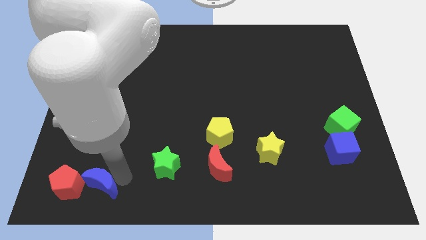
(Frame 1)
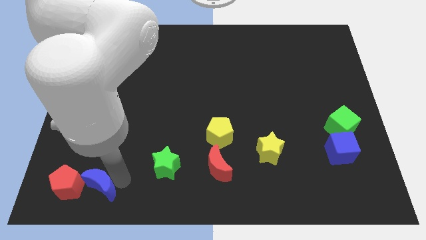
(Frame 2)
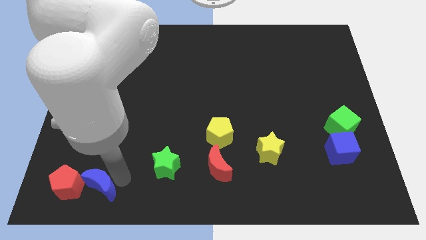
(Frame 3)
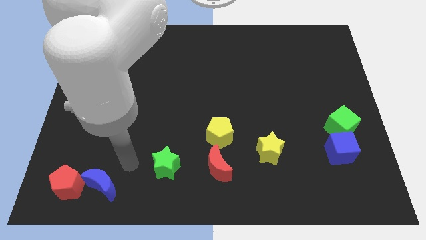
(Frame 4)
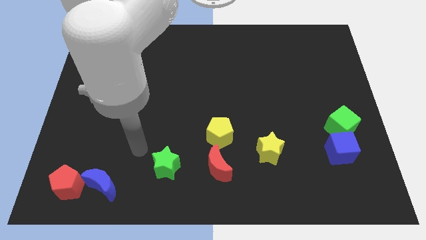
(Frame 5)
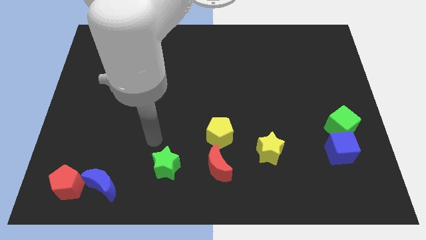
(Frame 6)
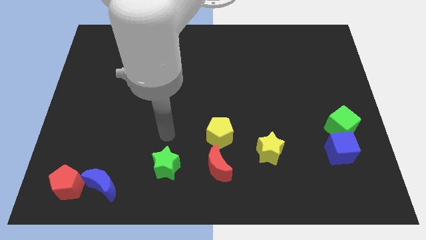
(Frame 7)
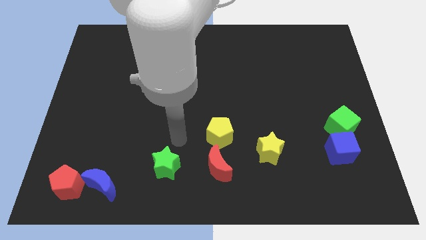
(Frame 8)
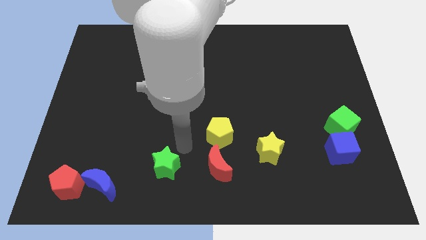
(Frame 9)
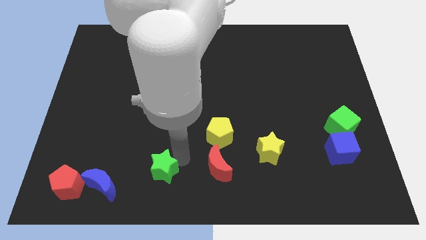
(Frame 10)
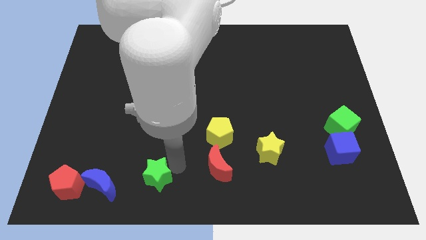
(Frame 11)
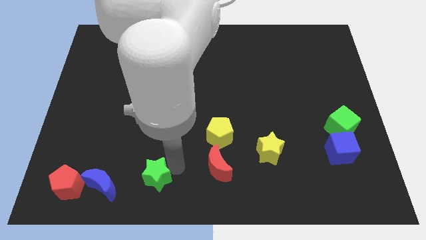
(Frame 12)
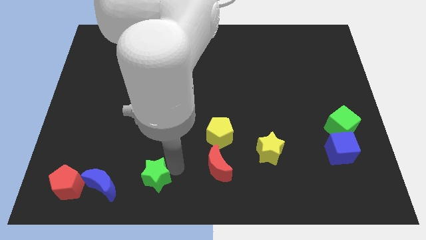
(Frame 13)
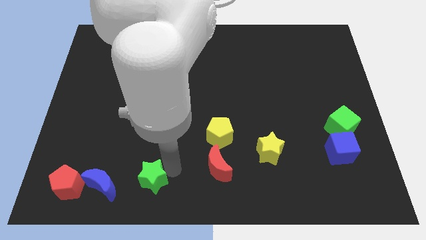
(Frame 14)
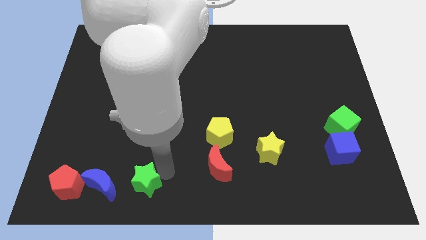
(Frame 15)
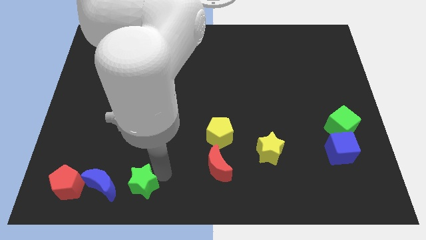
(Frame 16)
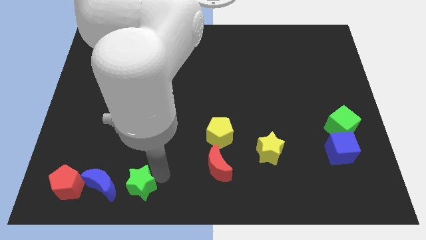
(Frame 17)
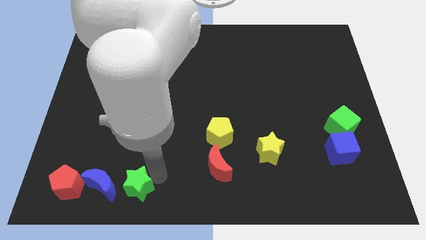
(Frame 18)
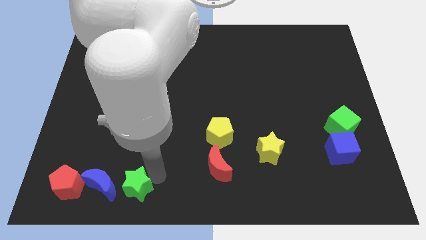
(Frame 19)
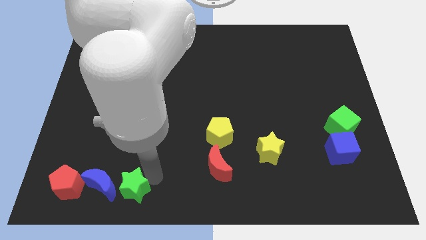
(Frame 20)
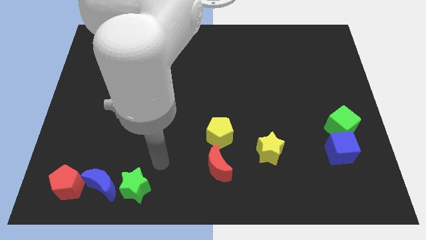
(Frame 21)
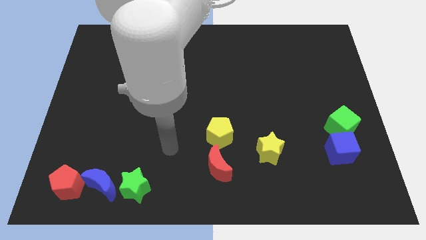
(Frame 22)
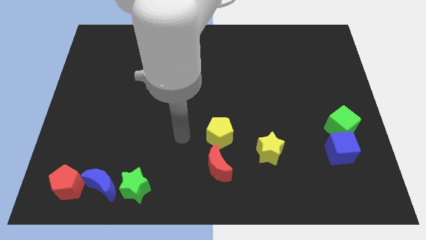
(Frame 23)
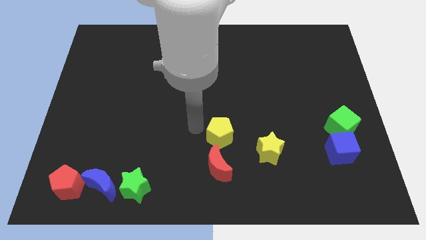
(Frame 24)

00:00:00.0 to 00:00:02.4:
move the green cube to the right of the blue crescent

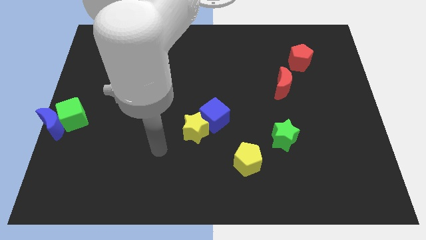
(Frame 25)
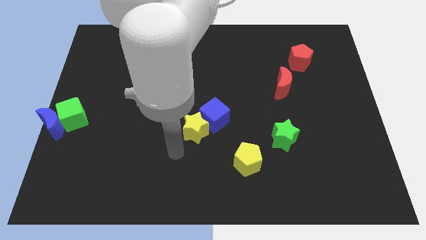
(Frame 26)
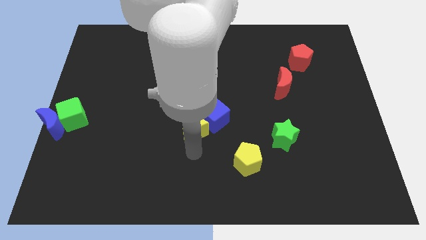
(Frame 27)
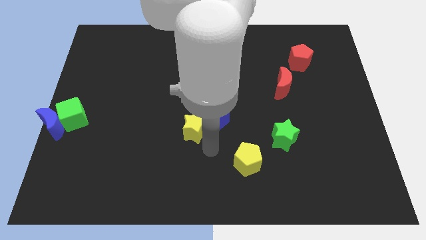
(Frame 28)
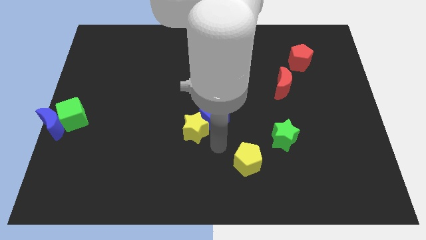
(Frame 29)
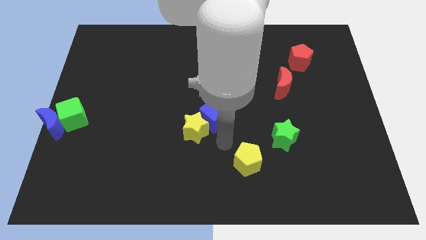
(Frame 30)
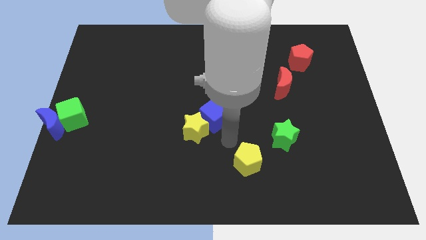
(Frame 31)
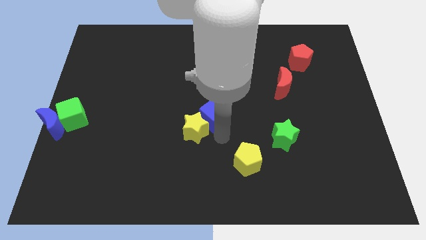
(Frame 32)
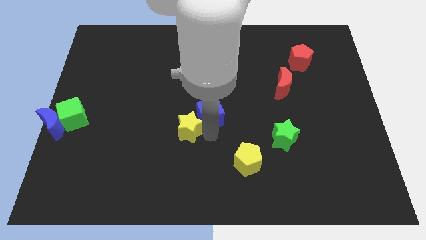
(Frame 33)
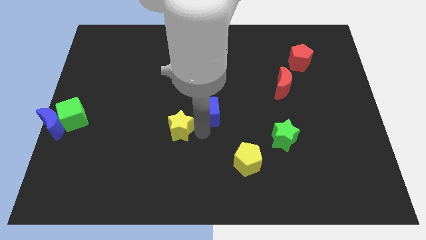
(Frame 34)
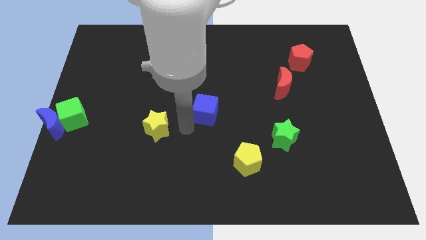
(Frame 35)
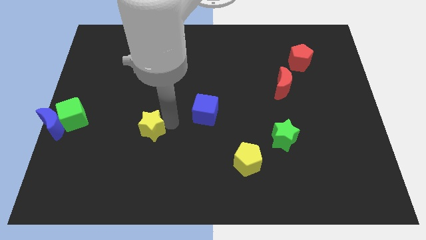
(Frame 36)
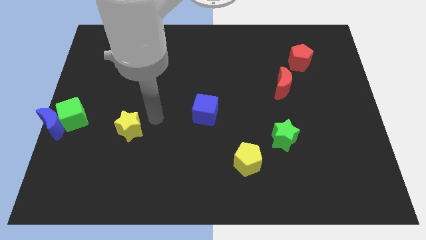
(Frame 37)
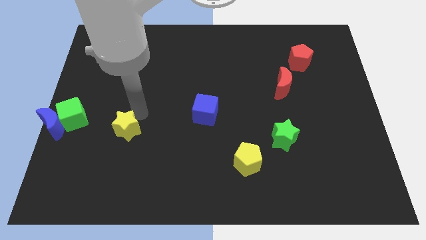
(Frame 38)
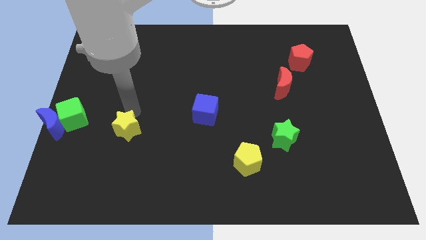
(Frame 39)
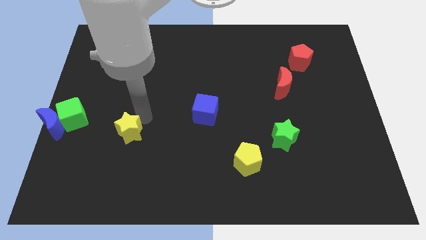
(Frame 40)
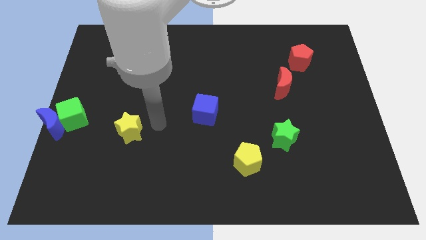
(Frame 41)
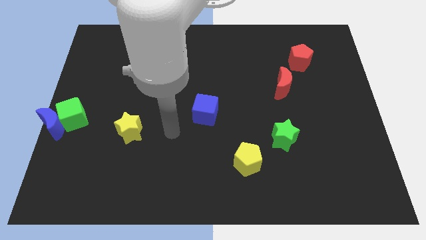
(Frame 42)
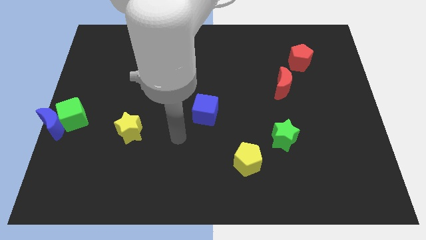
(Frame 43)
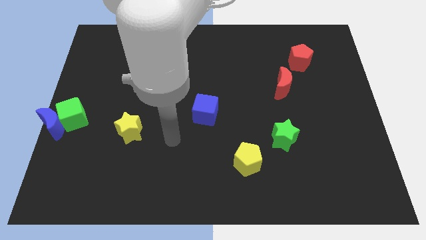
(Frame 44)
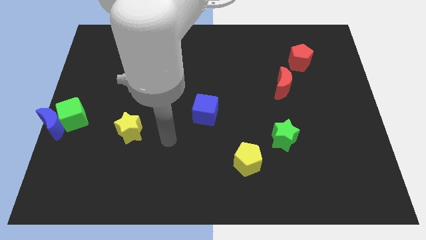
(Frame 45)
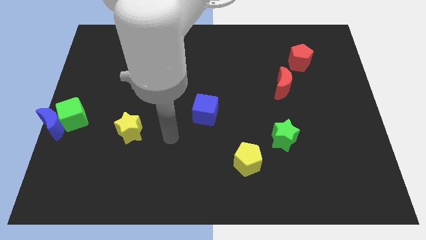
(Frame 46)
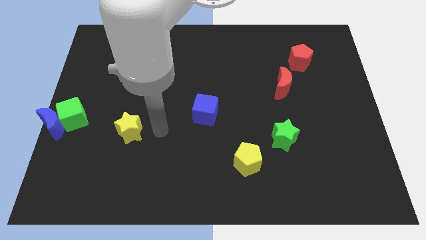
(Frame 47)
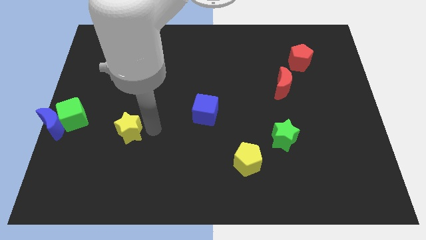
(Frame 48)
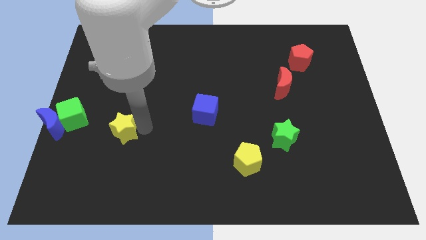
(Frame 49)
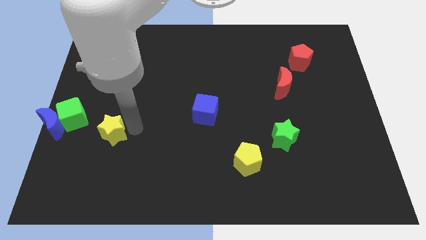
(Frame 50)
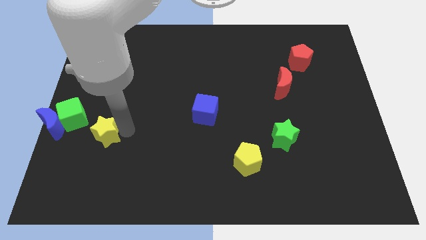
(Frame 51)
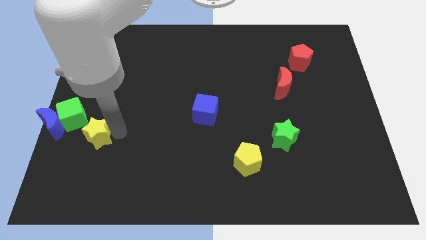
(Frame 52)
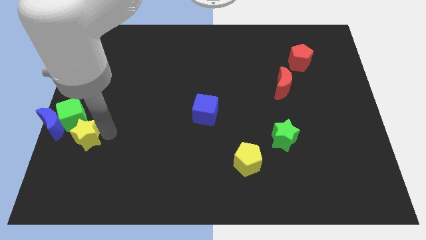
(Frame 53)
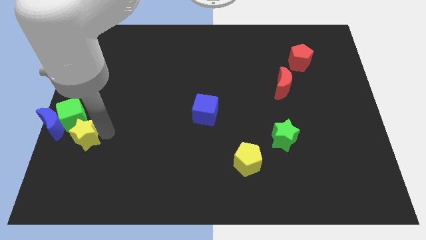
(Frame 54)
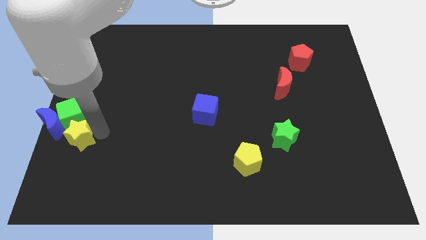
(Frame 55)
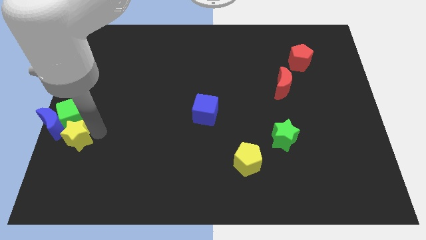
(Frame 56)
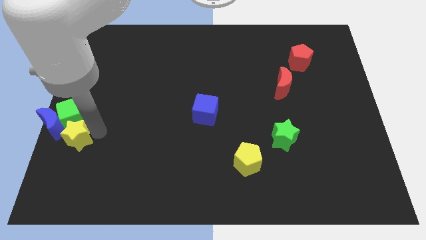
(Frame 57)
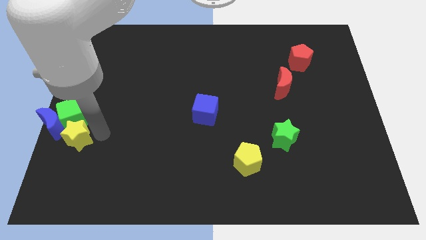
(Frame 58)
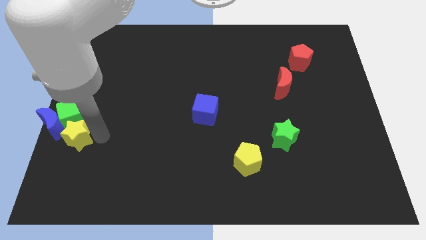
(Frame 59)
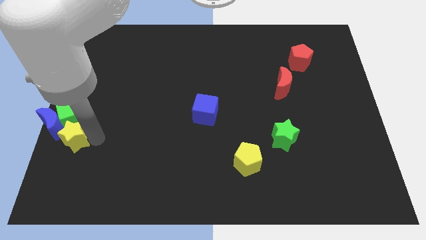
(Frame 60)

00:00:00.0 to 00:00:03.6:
place the yellow star below the green cube

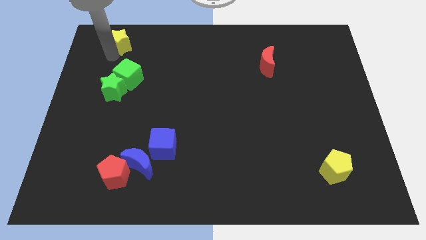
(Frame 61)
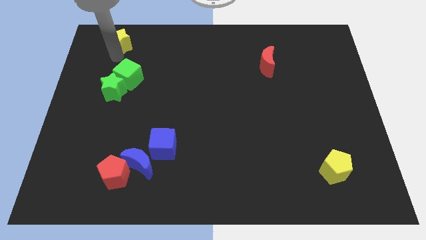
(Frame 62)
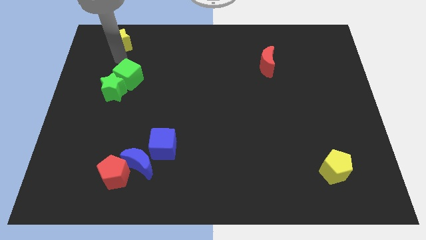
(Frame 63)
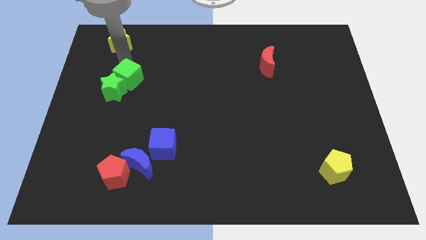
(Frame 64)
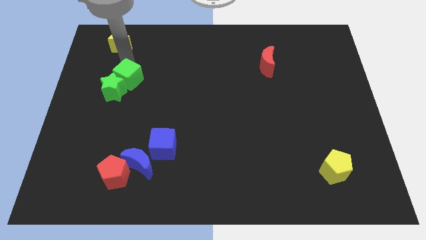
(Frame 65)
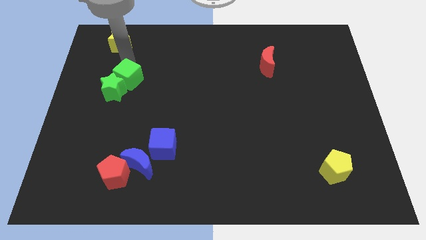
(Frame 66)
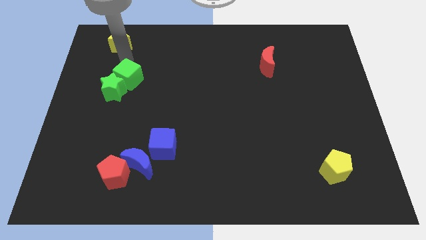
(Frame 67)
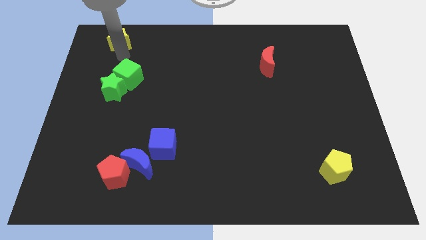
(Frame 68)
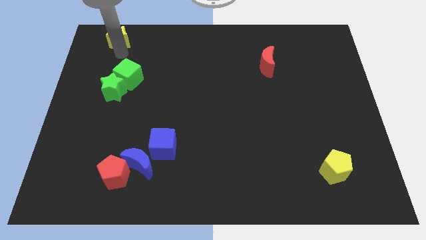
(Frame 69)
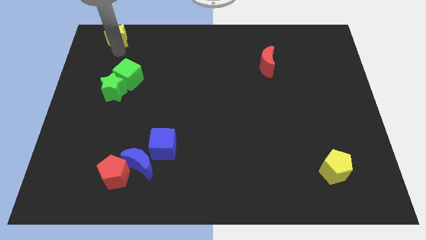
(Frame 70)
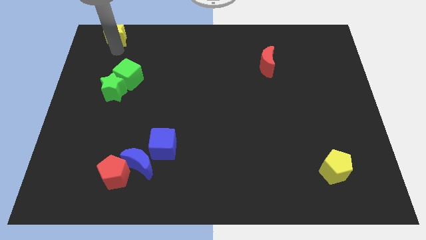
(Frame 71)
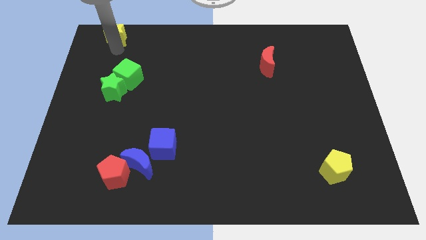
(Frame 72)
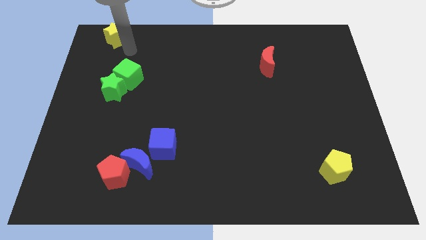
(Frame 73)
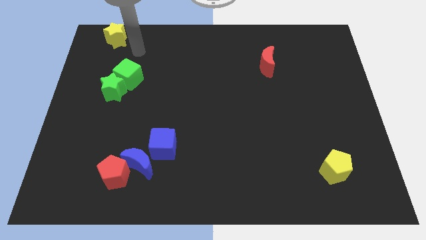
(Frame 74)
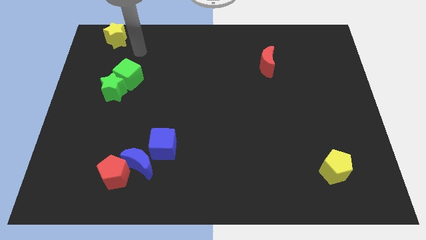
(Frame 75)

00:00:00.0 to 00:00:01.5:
slide the yellow star to the left side of the board

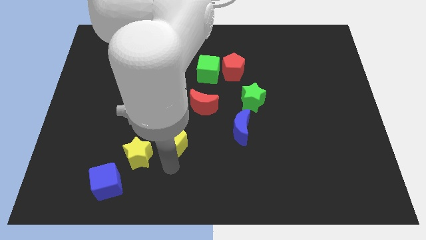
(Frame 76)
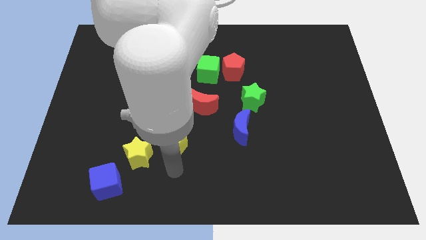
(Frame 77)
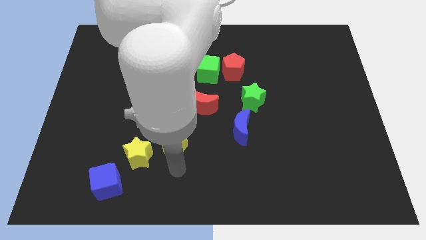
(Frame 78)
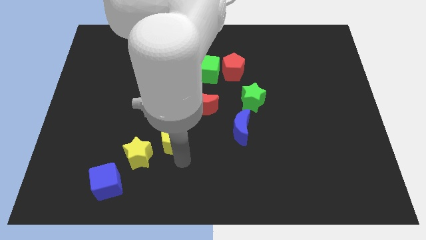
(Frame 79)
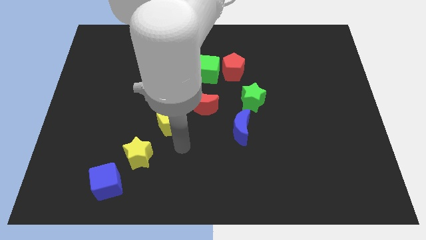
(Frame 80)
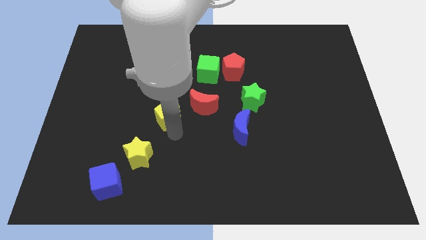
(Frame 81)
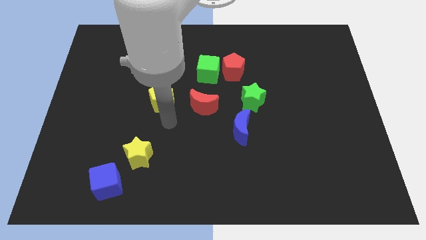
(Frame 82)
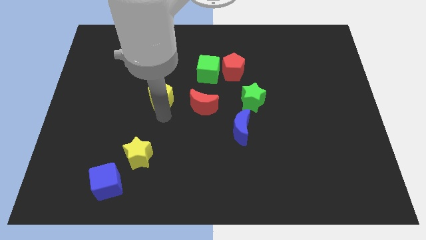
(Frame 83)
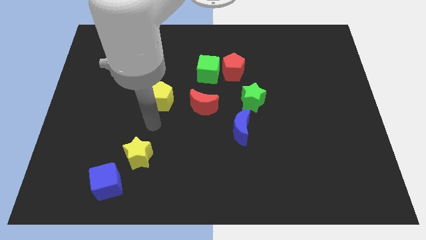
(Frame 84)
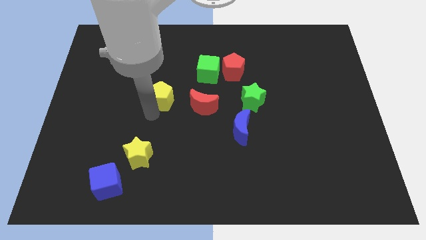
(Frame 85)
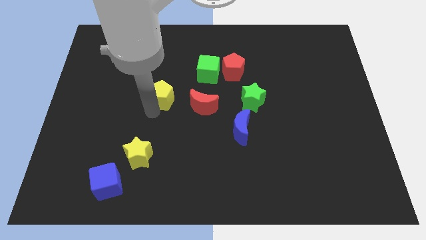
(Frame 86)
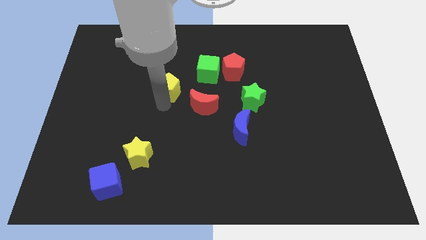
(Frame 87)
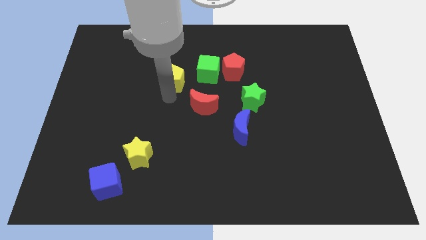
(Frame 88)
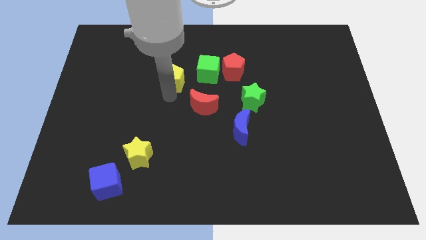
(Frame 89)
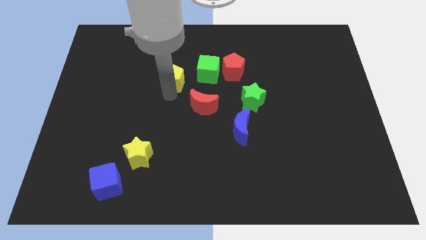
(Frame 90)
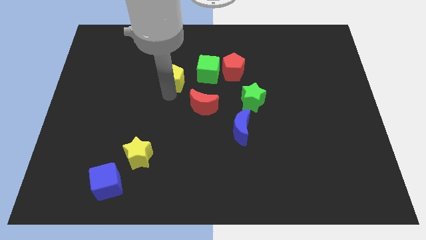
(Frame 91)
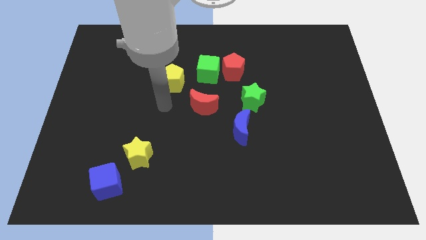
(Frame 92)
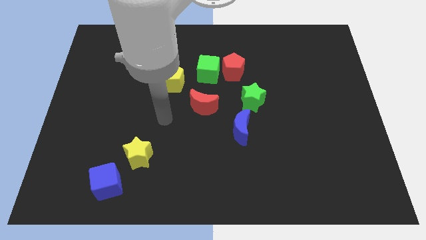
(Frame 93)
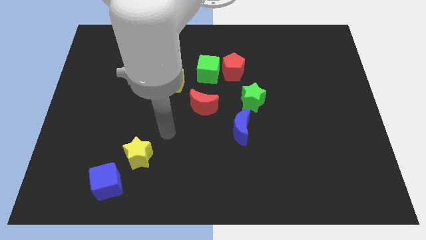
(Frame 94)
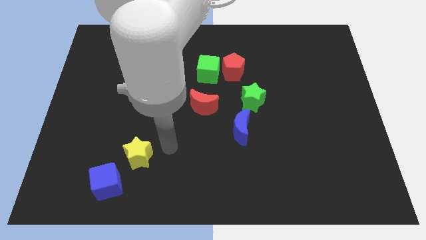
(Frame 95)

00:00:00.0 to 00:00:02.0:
place the yellow pentagon to the left side of the green cube
